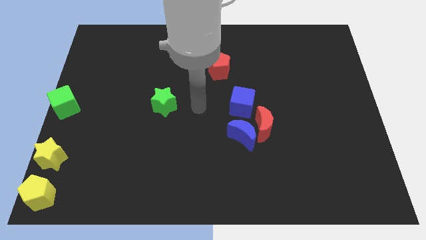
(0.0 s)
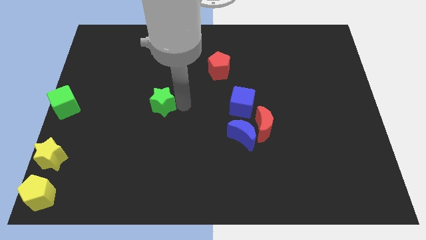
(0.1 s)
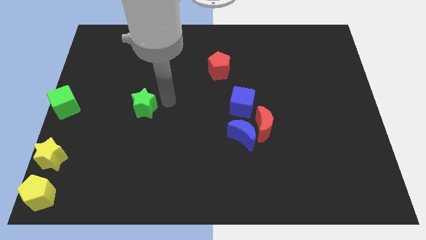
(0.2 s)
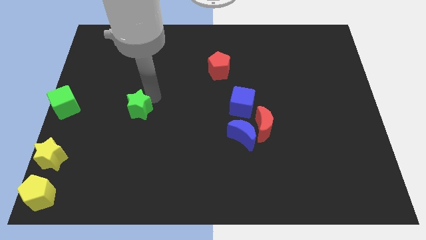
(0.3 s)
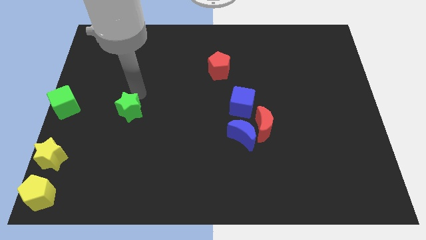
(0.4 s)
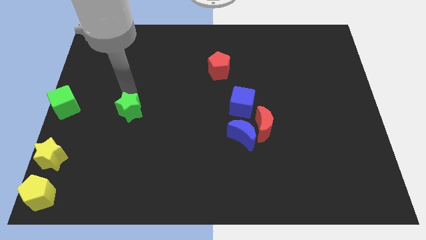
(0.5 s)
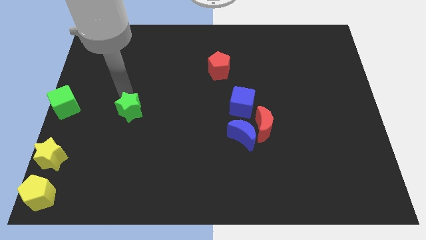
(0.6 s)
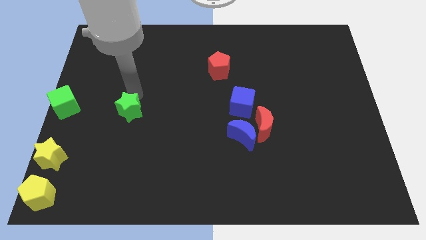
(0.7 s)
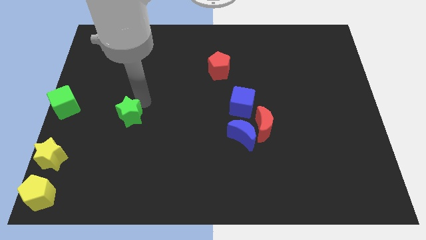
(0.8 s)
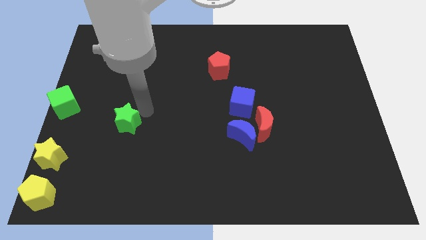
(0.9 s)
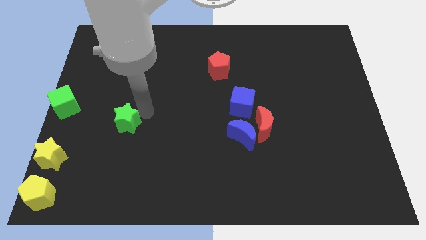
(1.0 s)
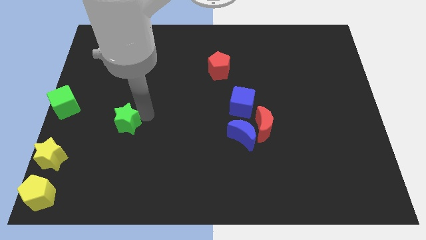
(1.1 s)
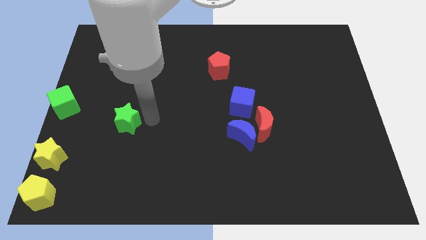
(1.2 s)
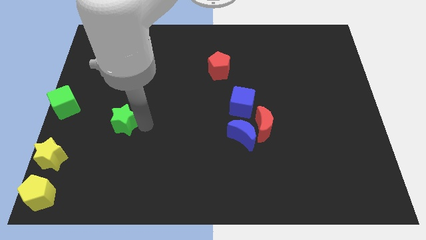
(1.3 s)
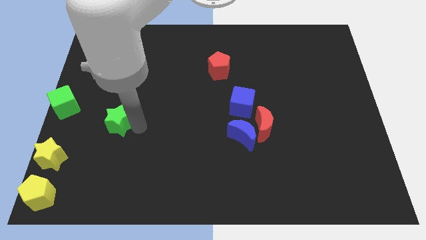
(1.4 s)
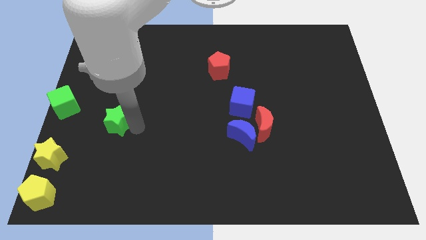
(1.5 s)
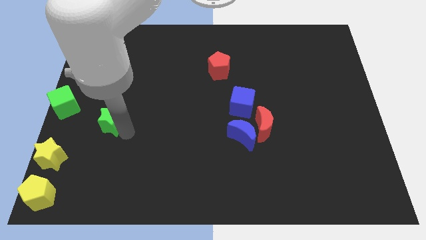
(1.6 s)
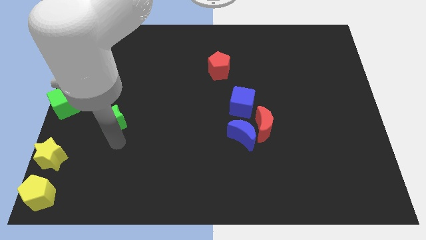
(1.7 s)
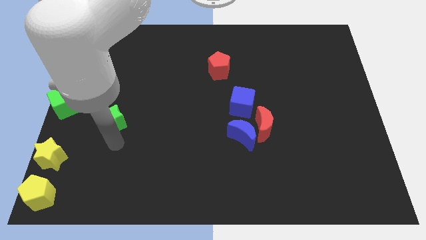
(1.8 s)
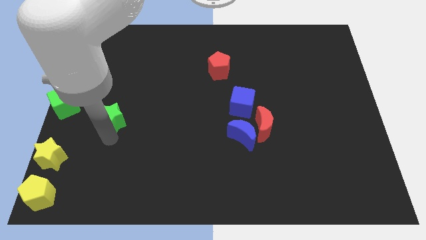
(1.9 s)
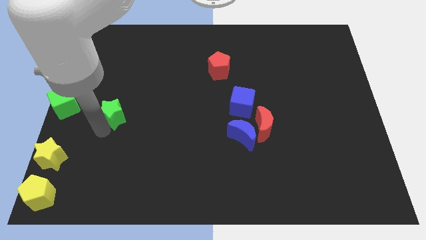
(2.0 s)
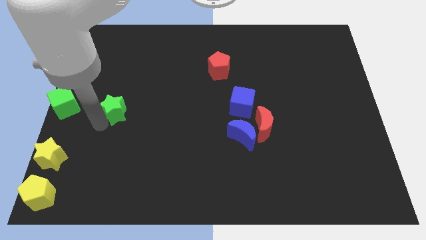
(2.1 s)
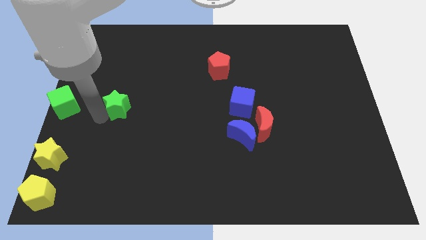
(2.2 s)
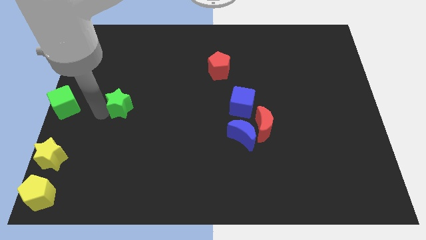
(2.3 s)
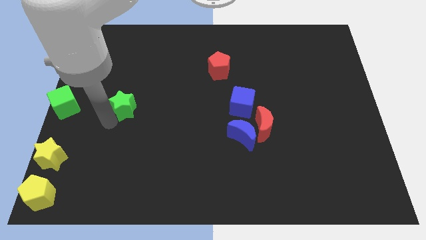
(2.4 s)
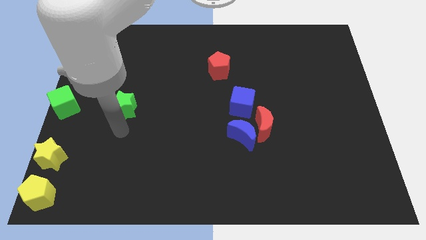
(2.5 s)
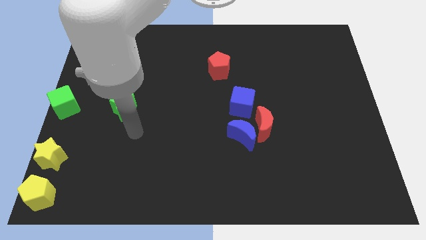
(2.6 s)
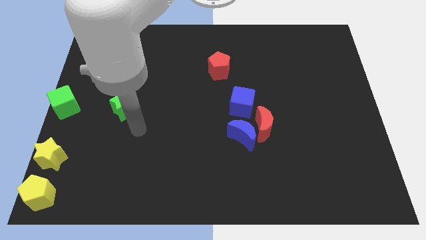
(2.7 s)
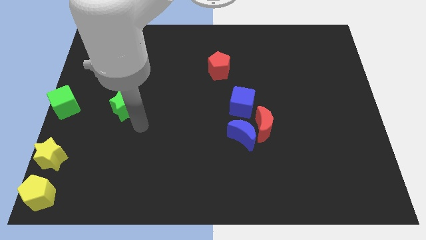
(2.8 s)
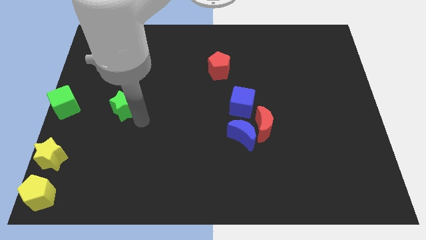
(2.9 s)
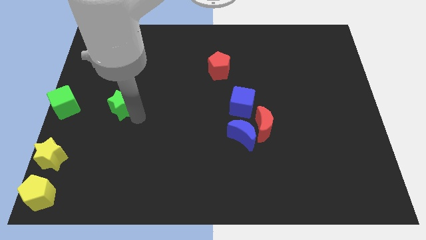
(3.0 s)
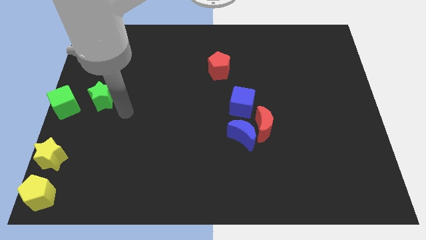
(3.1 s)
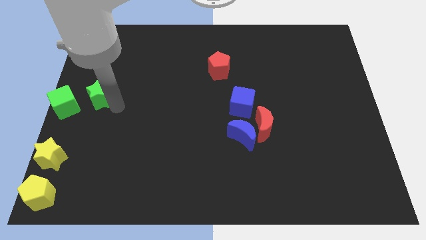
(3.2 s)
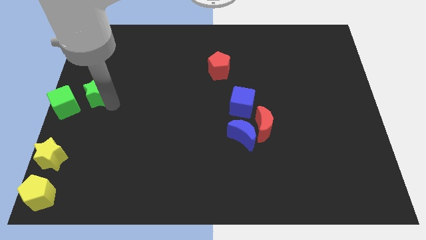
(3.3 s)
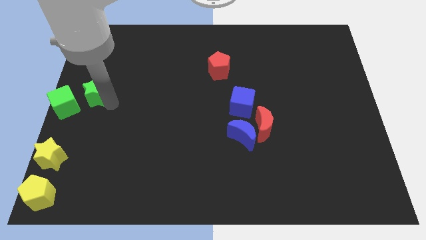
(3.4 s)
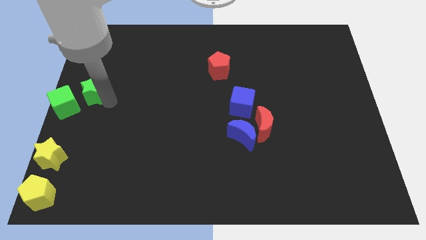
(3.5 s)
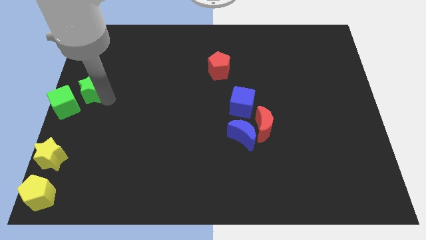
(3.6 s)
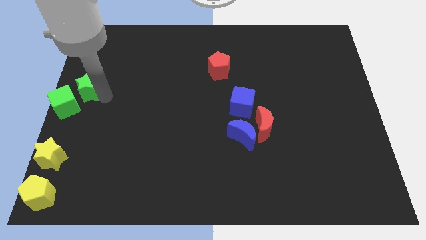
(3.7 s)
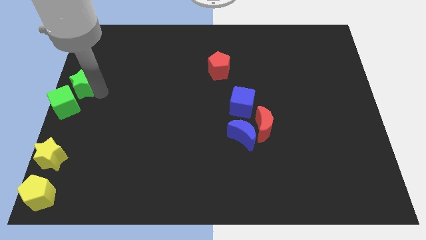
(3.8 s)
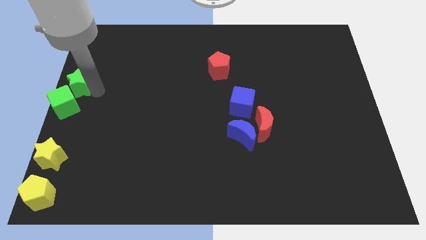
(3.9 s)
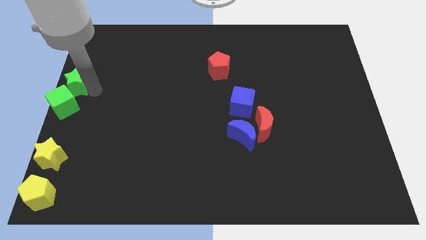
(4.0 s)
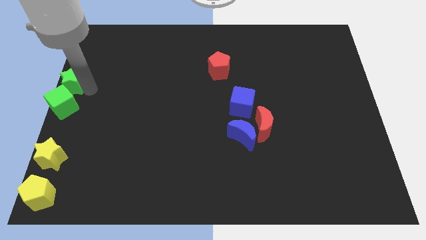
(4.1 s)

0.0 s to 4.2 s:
push the green star above the green cube

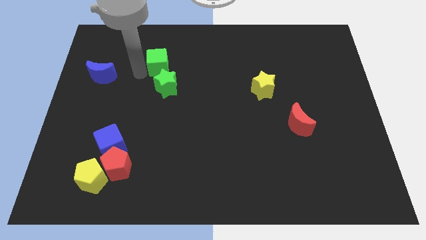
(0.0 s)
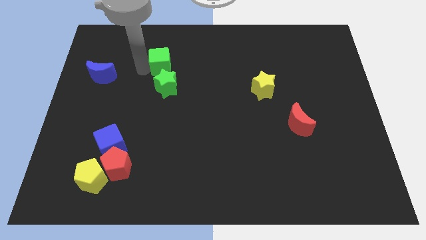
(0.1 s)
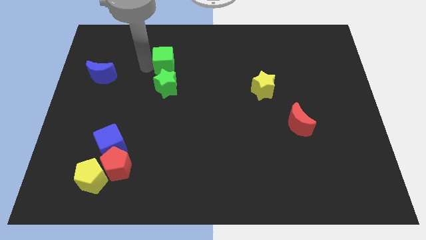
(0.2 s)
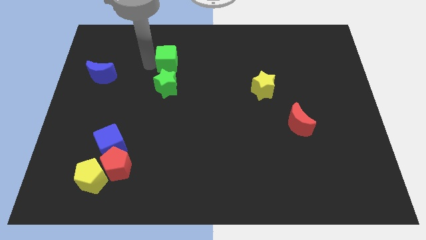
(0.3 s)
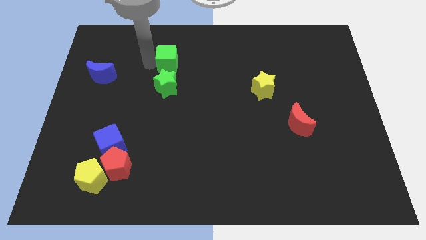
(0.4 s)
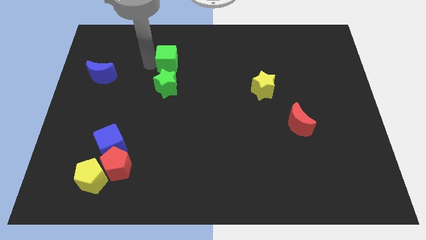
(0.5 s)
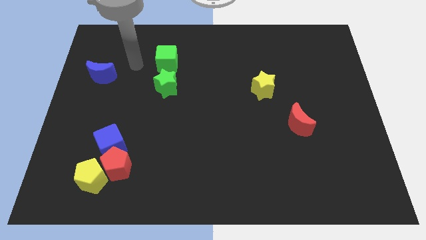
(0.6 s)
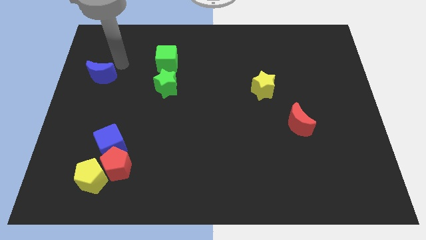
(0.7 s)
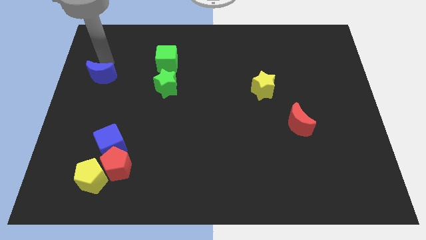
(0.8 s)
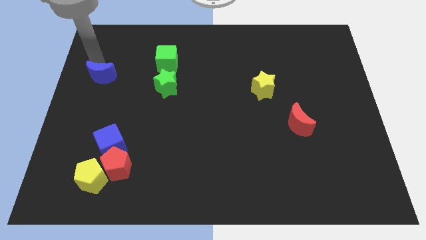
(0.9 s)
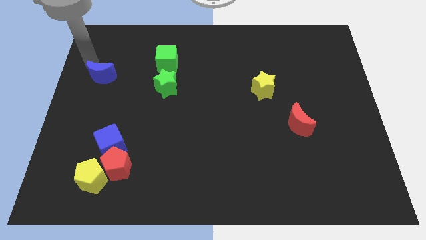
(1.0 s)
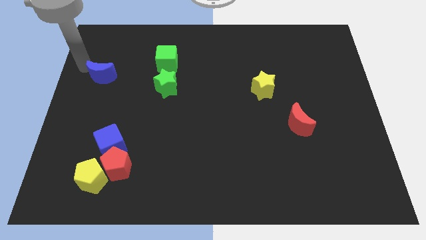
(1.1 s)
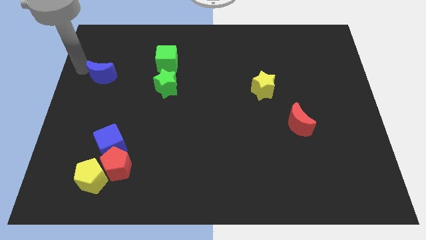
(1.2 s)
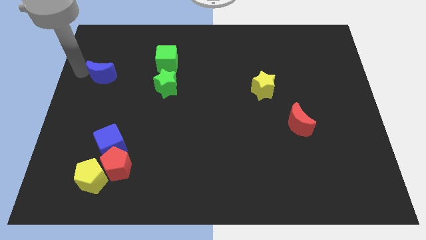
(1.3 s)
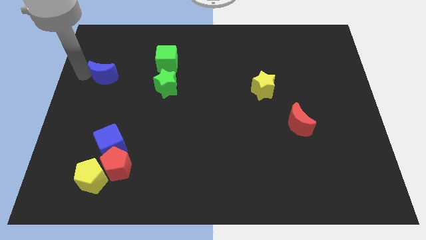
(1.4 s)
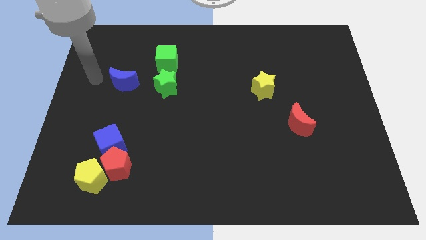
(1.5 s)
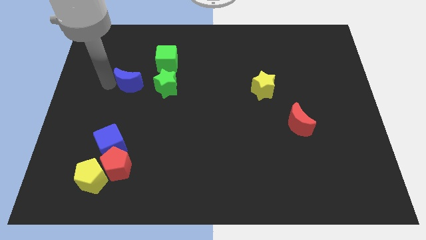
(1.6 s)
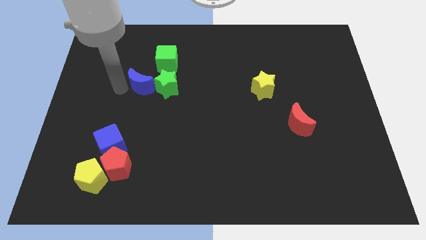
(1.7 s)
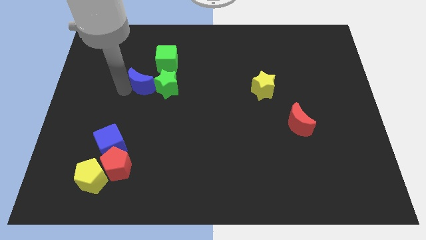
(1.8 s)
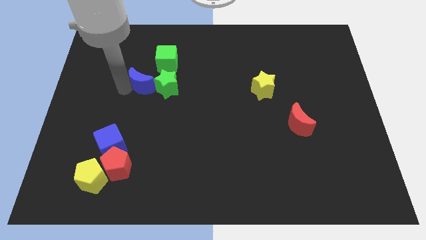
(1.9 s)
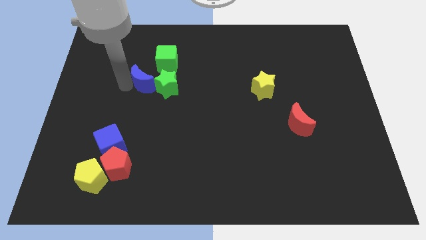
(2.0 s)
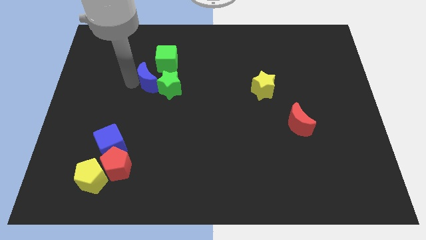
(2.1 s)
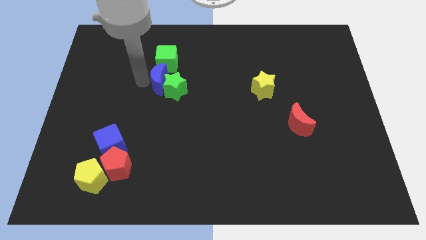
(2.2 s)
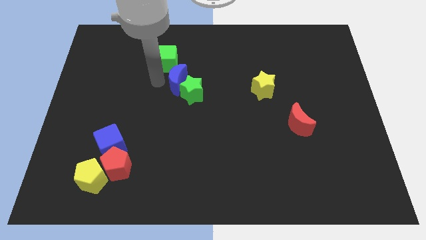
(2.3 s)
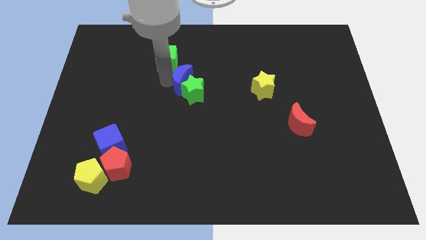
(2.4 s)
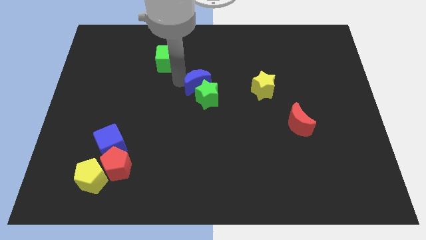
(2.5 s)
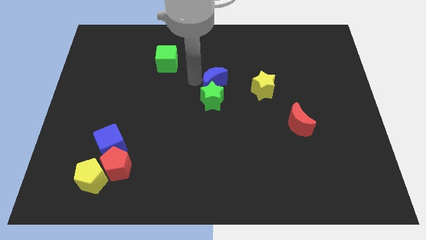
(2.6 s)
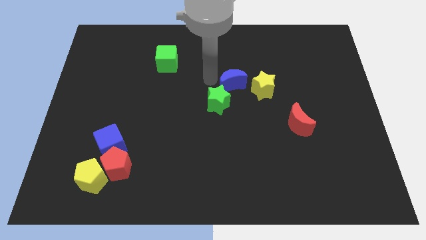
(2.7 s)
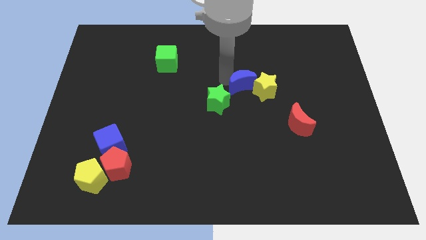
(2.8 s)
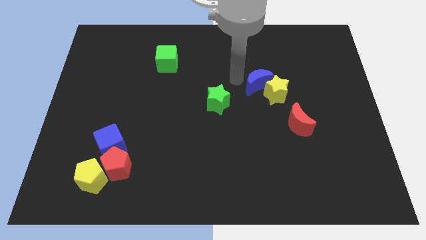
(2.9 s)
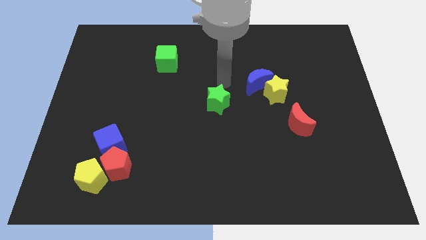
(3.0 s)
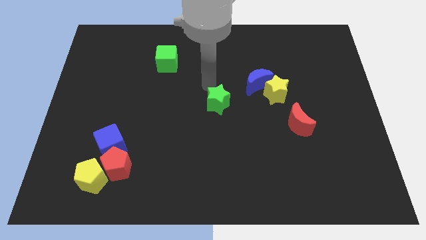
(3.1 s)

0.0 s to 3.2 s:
push the blue crescent into the yellow star

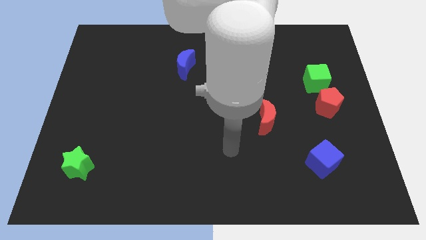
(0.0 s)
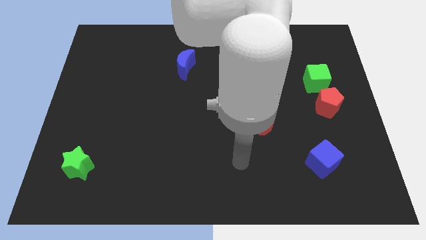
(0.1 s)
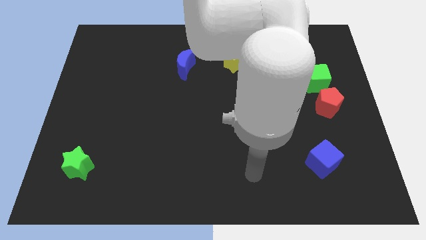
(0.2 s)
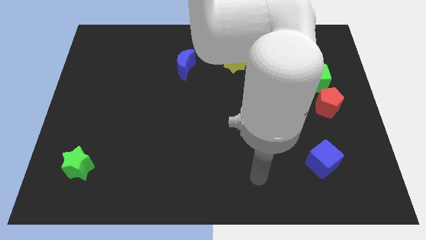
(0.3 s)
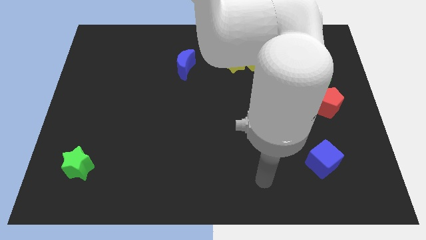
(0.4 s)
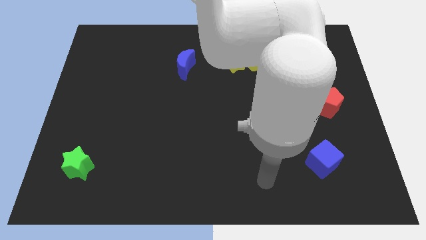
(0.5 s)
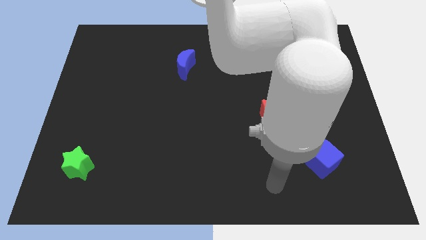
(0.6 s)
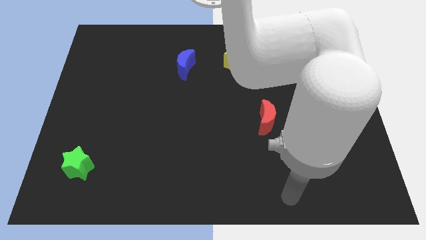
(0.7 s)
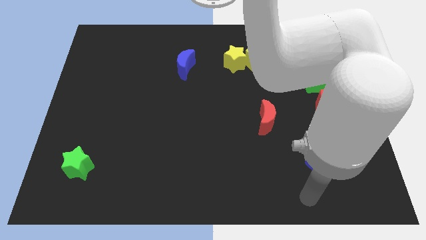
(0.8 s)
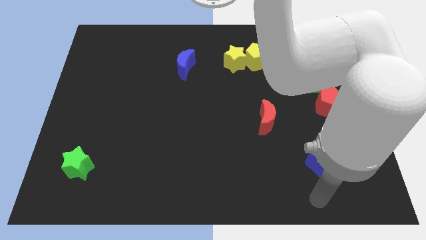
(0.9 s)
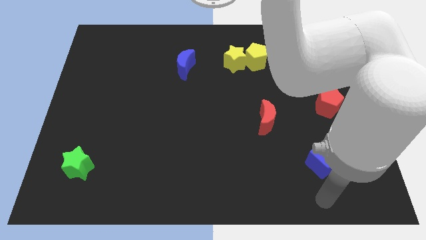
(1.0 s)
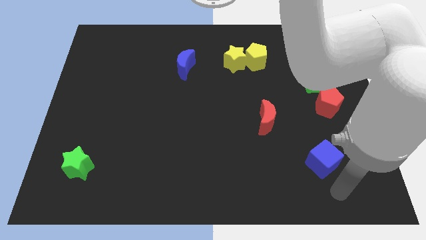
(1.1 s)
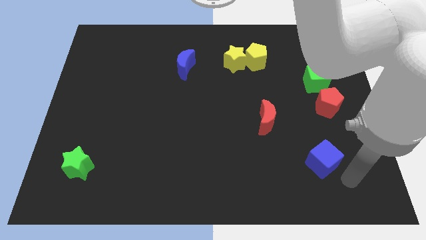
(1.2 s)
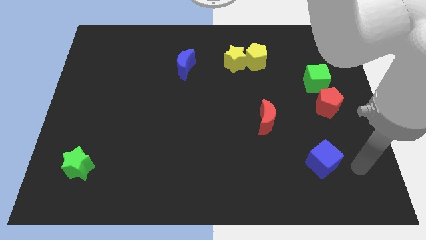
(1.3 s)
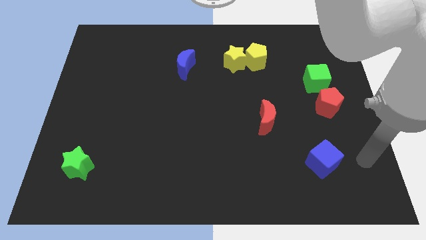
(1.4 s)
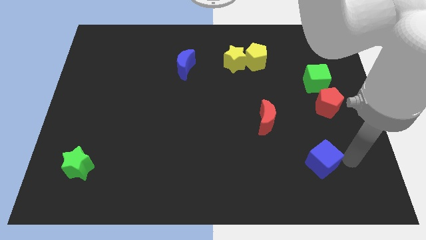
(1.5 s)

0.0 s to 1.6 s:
move your arm to the right of the blue cube
